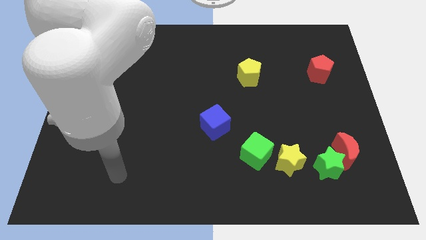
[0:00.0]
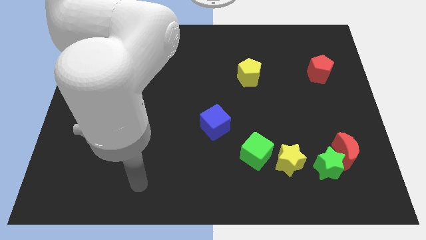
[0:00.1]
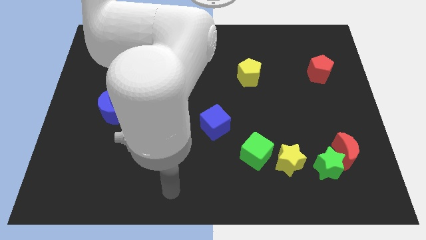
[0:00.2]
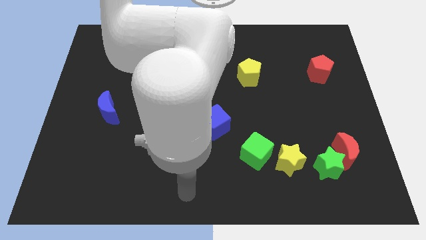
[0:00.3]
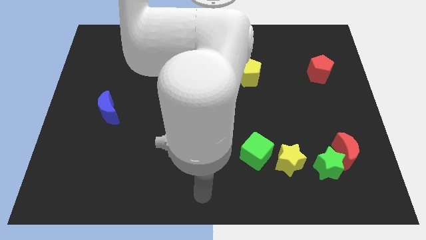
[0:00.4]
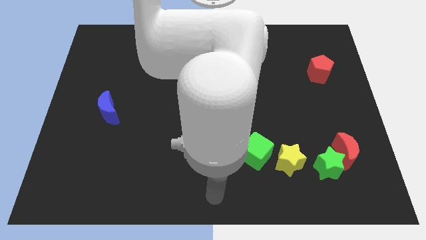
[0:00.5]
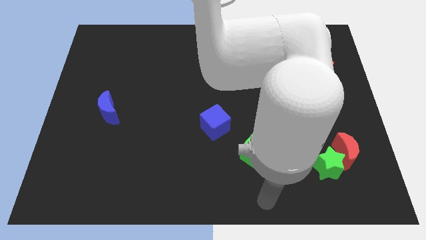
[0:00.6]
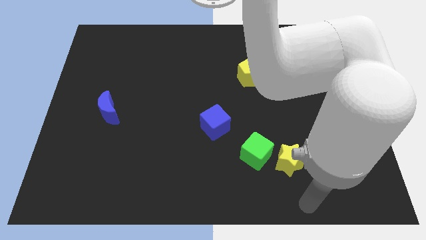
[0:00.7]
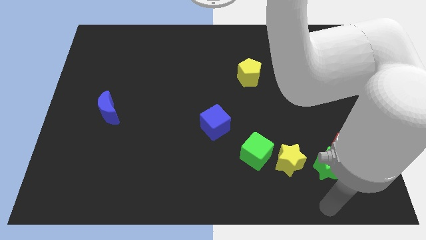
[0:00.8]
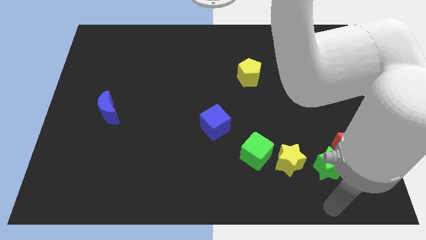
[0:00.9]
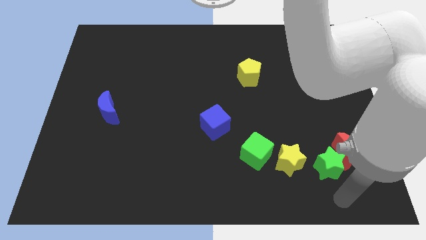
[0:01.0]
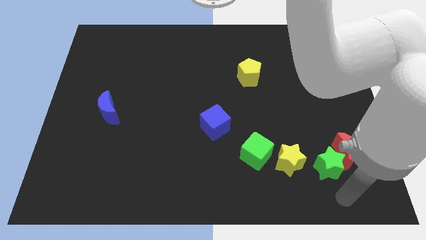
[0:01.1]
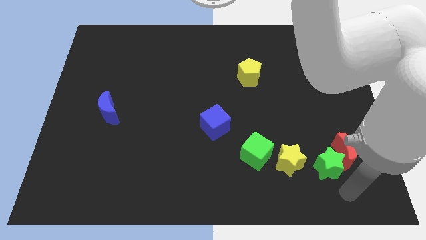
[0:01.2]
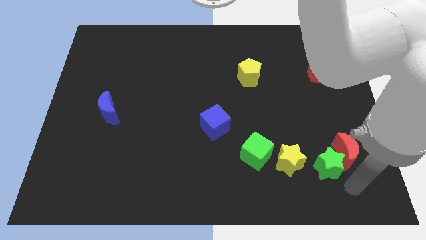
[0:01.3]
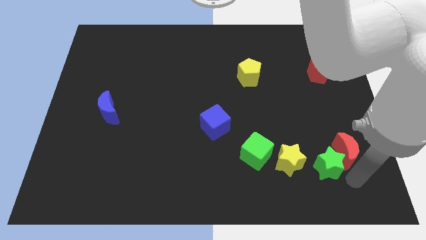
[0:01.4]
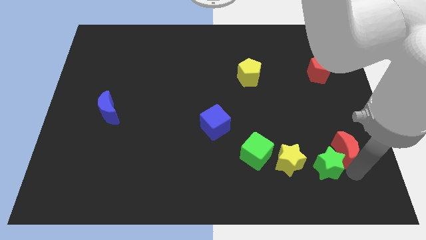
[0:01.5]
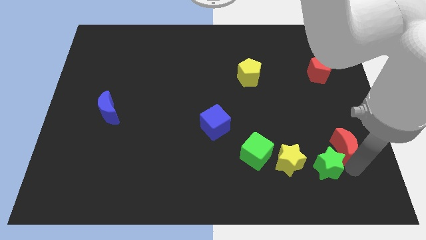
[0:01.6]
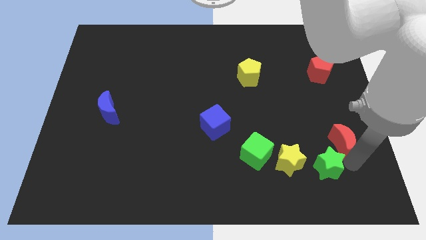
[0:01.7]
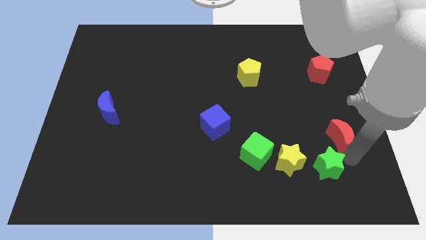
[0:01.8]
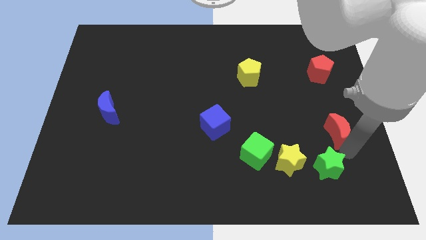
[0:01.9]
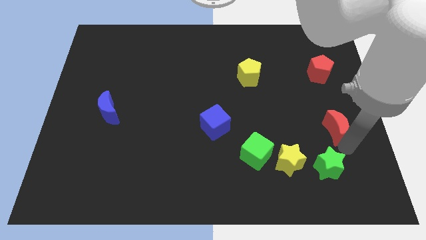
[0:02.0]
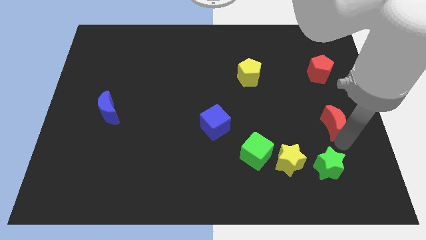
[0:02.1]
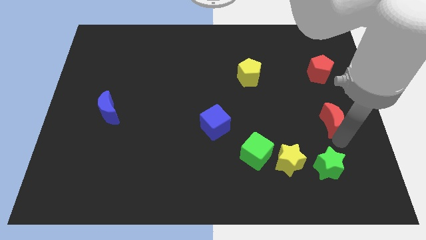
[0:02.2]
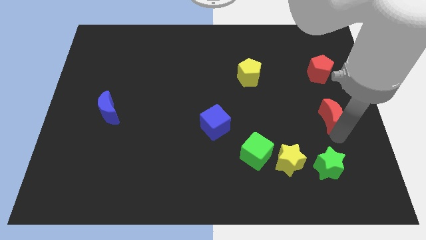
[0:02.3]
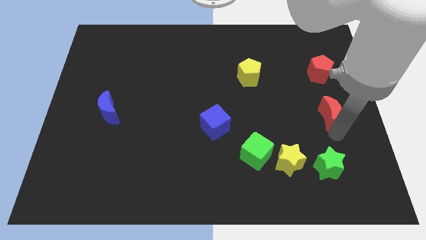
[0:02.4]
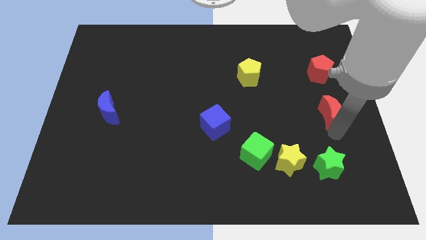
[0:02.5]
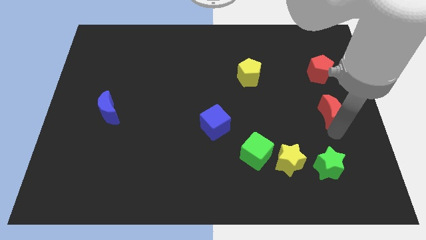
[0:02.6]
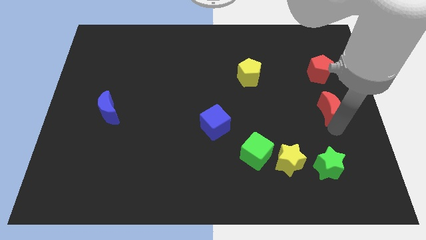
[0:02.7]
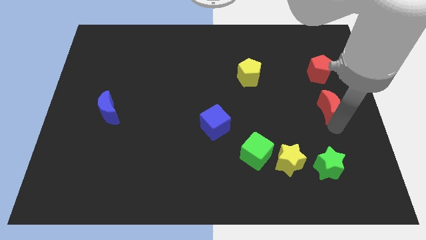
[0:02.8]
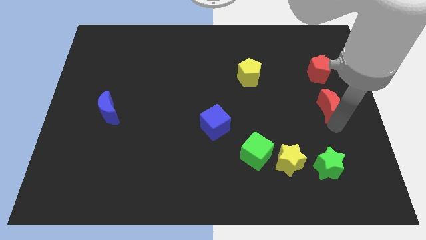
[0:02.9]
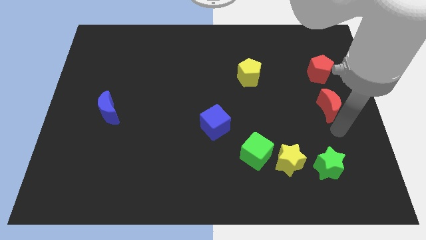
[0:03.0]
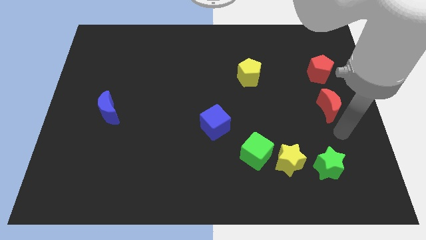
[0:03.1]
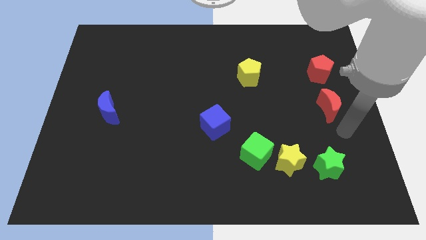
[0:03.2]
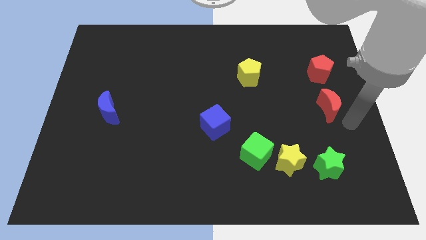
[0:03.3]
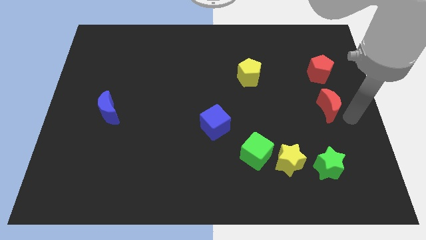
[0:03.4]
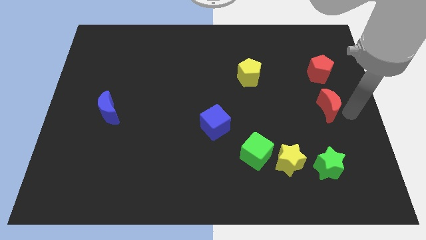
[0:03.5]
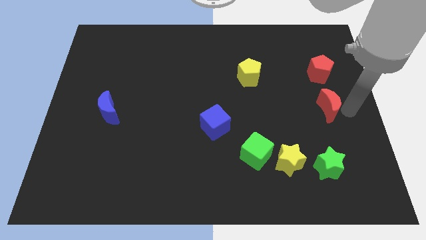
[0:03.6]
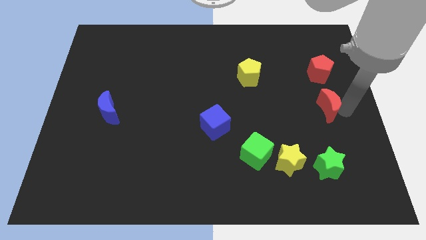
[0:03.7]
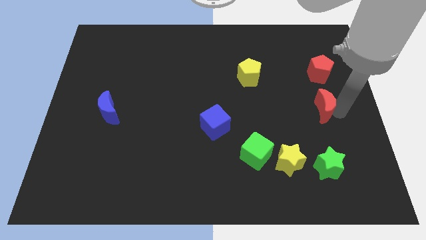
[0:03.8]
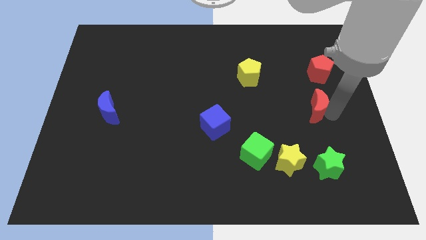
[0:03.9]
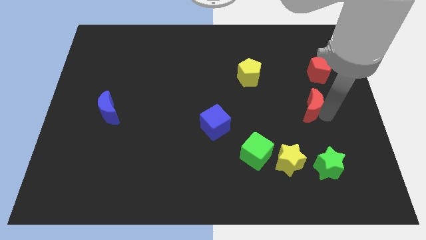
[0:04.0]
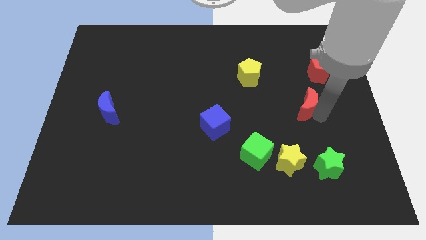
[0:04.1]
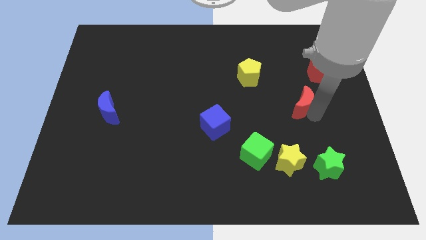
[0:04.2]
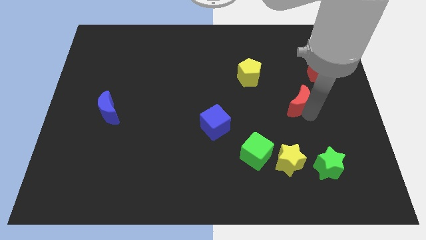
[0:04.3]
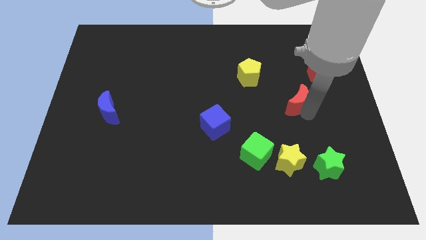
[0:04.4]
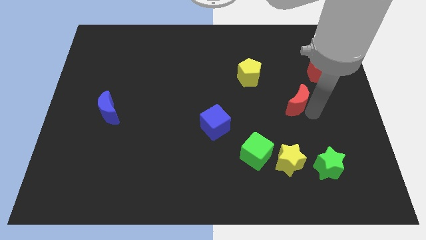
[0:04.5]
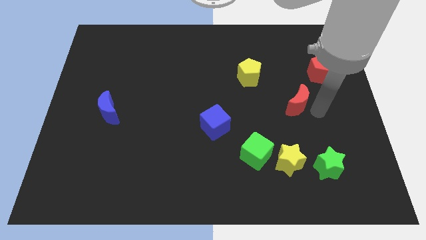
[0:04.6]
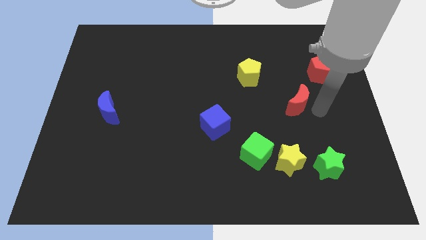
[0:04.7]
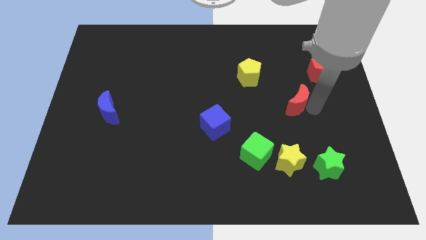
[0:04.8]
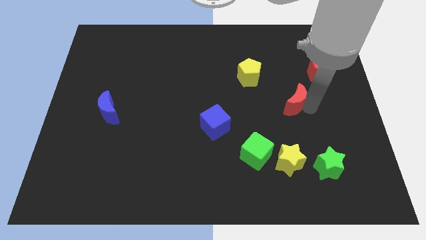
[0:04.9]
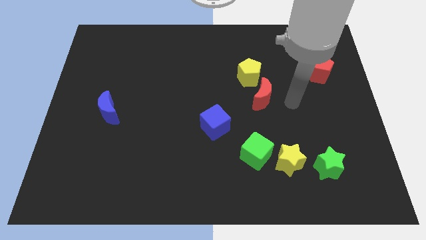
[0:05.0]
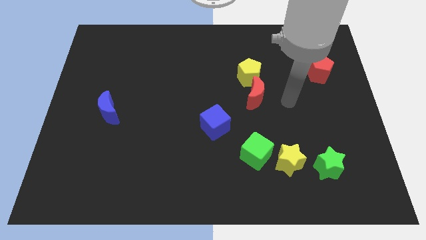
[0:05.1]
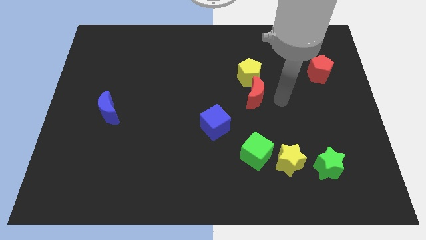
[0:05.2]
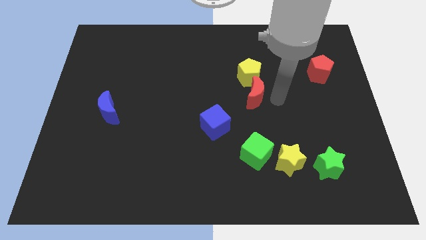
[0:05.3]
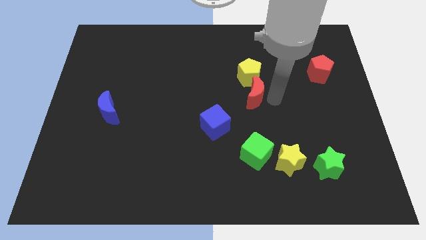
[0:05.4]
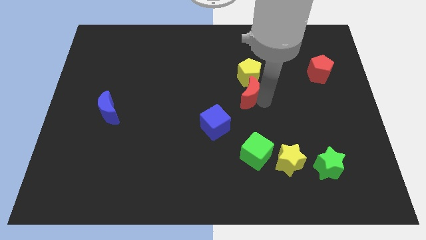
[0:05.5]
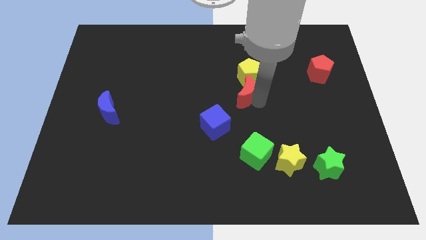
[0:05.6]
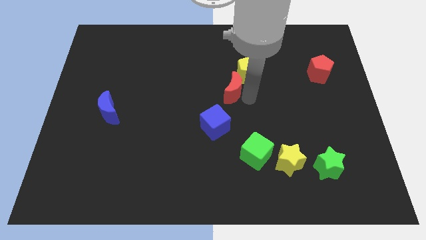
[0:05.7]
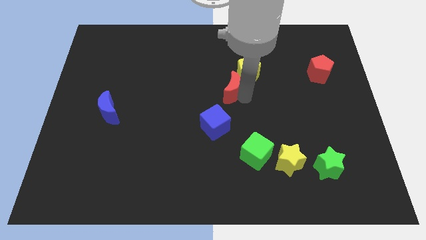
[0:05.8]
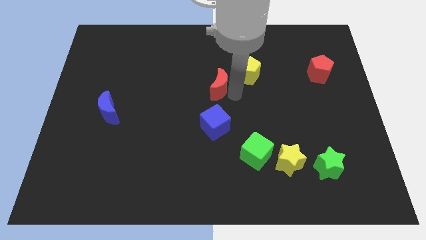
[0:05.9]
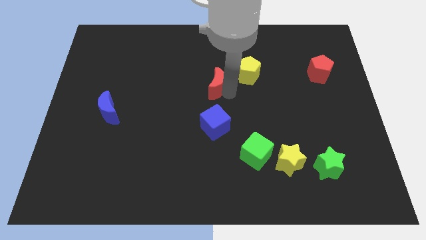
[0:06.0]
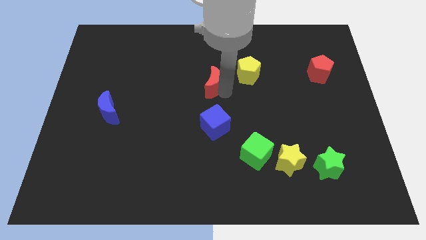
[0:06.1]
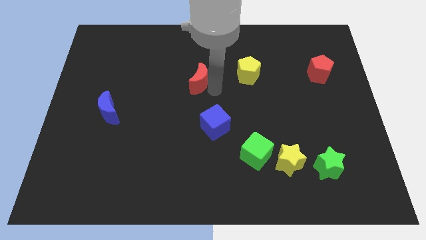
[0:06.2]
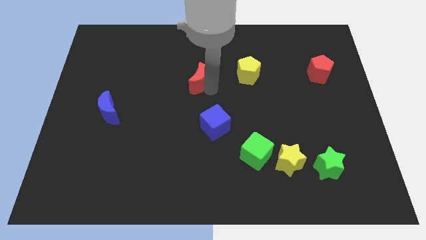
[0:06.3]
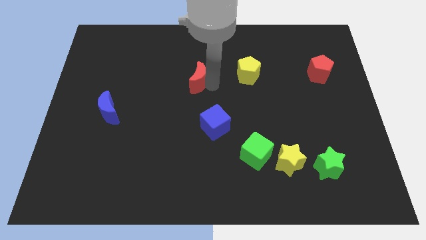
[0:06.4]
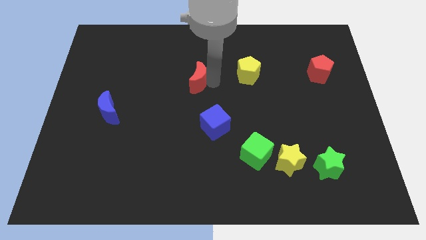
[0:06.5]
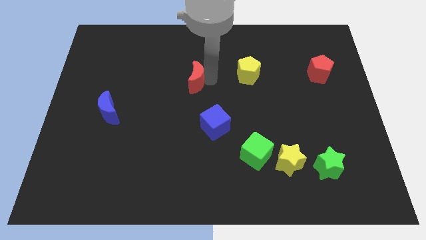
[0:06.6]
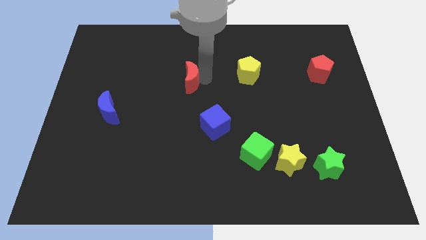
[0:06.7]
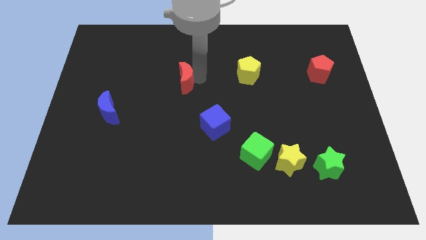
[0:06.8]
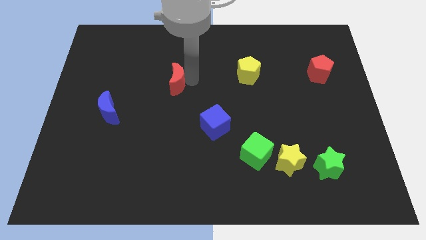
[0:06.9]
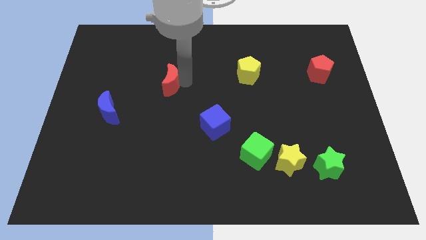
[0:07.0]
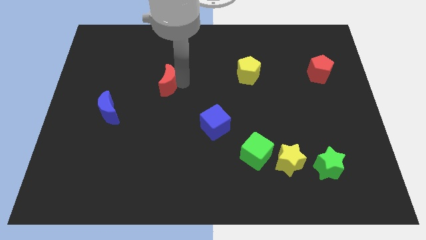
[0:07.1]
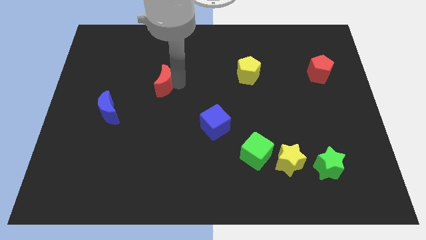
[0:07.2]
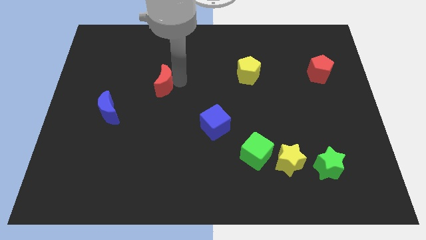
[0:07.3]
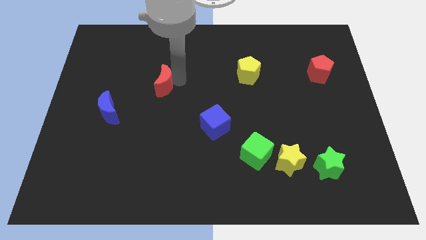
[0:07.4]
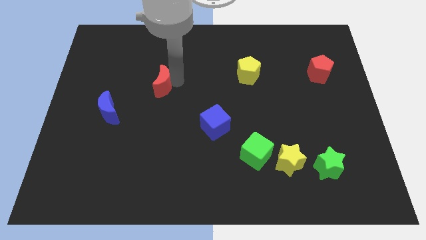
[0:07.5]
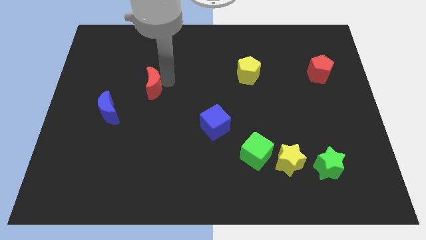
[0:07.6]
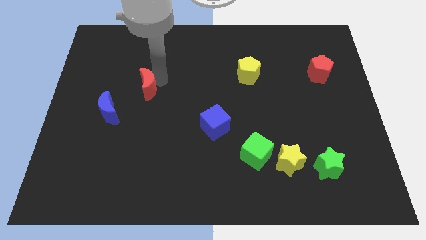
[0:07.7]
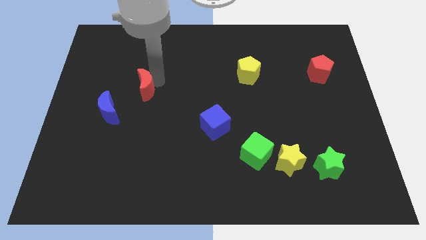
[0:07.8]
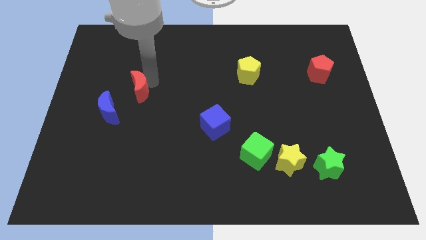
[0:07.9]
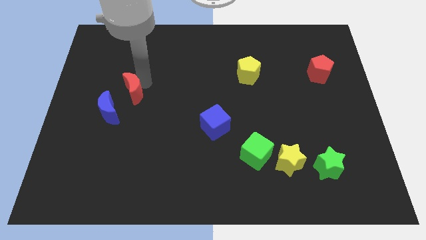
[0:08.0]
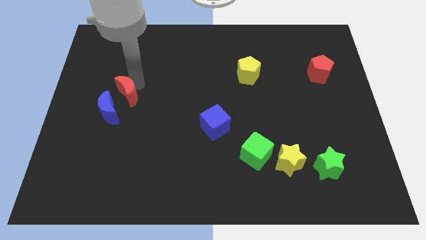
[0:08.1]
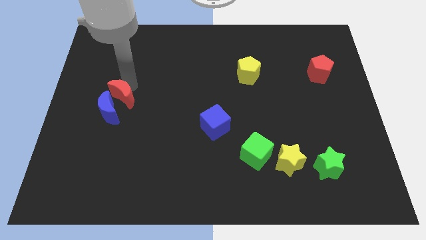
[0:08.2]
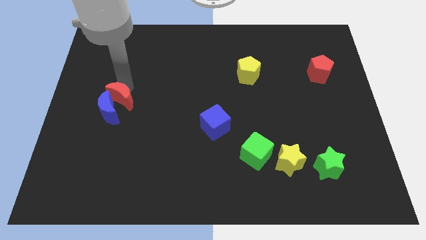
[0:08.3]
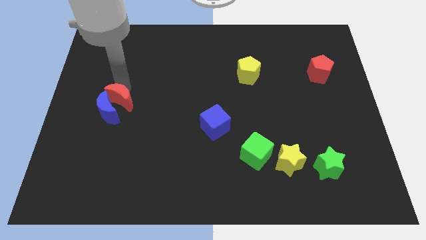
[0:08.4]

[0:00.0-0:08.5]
move the red moon to the blue moon
